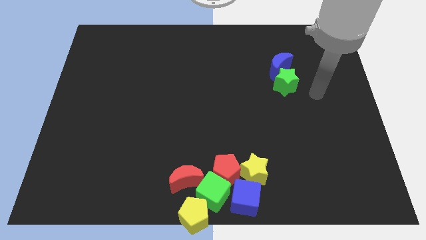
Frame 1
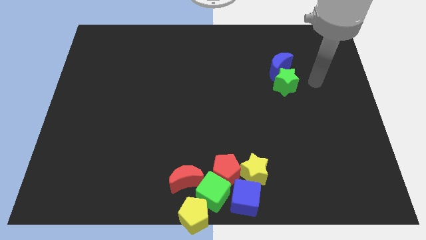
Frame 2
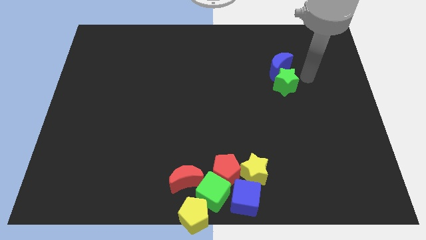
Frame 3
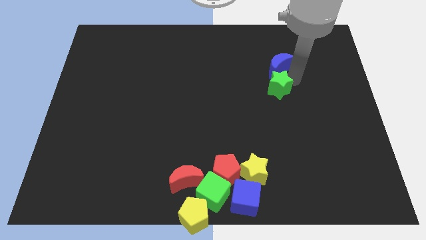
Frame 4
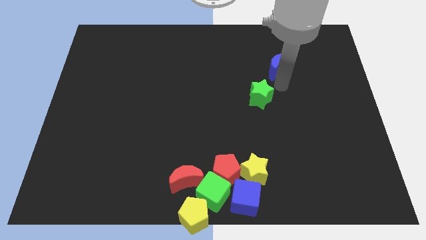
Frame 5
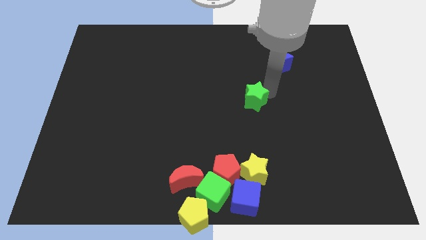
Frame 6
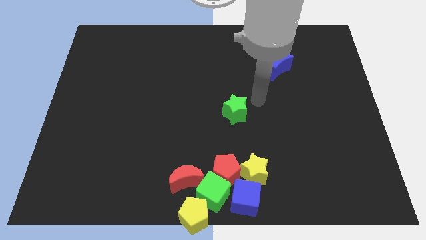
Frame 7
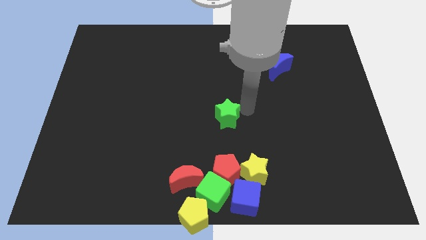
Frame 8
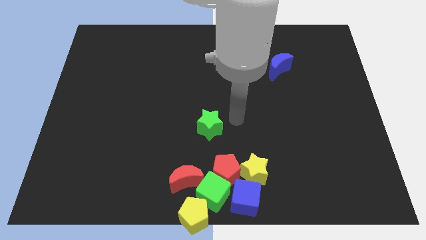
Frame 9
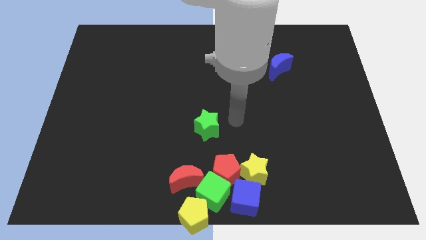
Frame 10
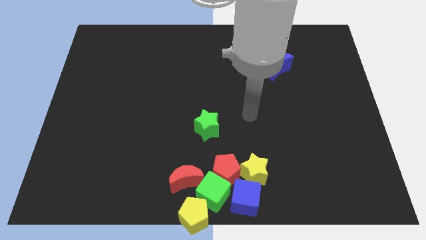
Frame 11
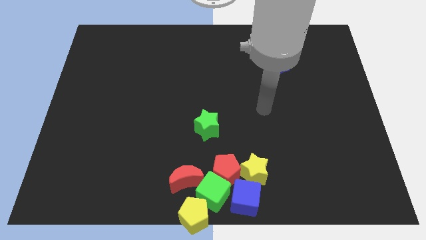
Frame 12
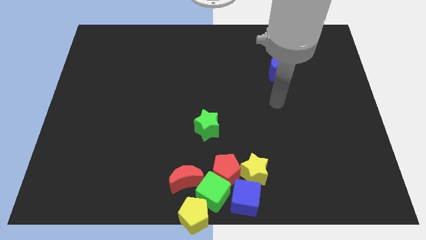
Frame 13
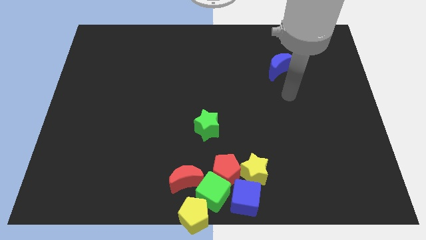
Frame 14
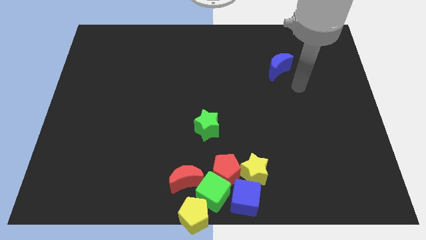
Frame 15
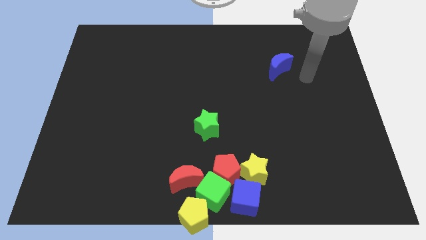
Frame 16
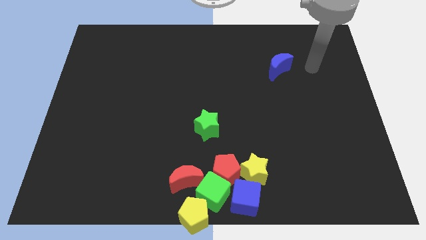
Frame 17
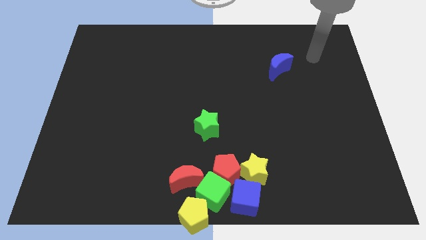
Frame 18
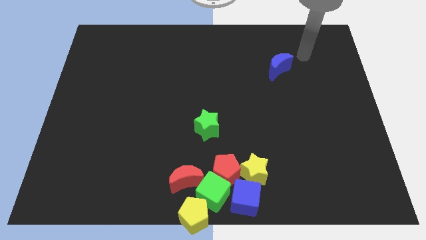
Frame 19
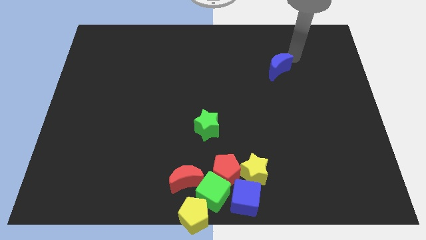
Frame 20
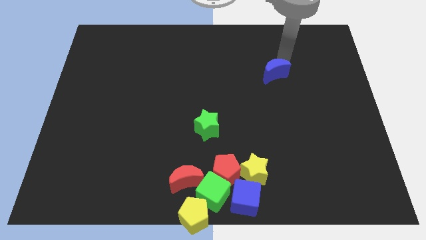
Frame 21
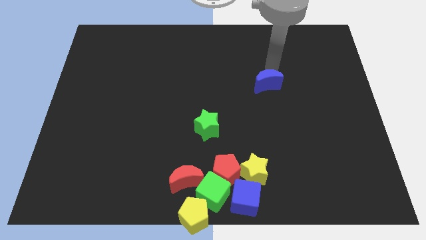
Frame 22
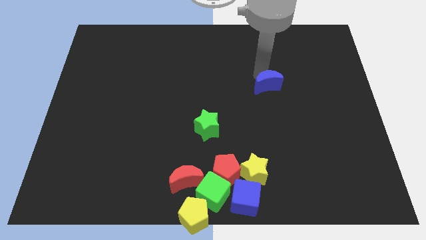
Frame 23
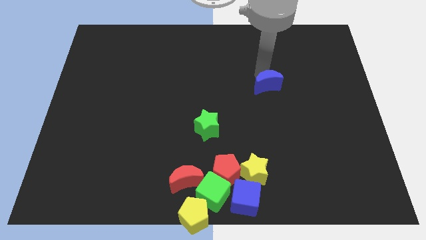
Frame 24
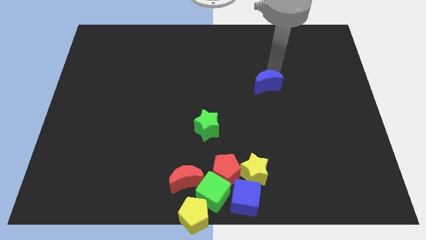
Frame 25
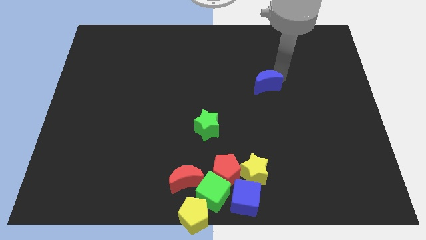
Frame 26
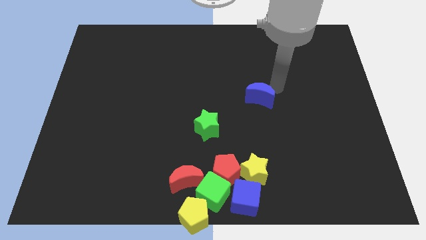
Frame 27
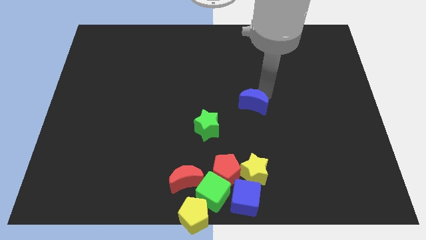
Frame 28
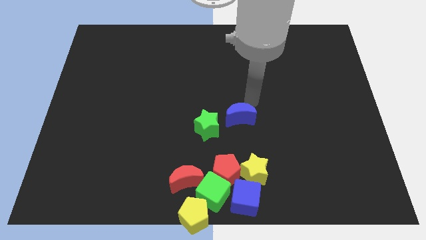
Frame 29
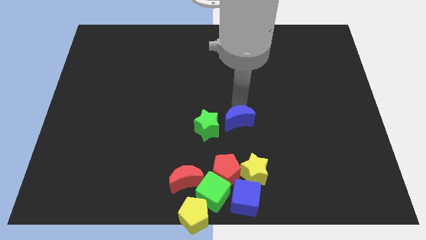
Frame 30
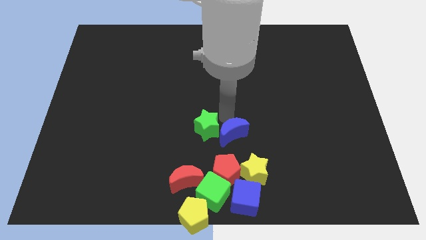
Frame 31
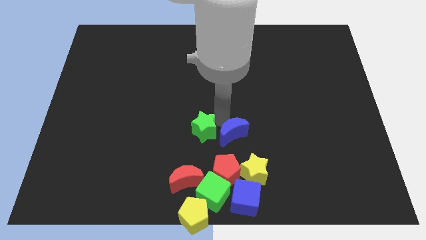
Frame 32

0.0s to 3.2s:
move the green star and blue cube towards the top side of the group of blocks

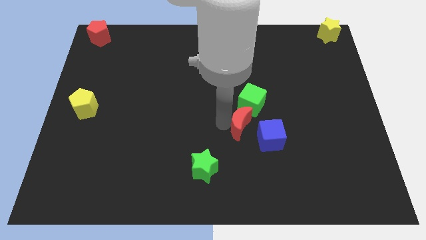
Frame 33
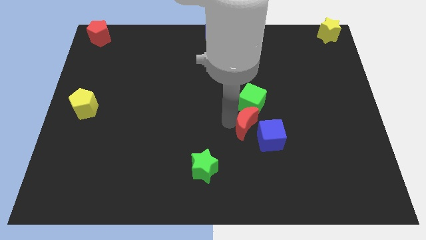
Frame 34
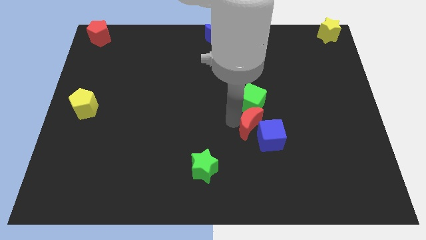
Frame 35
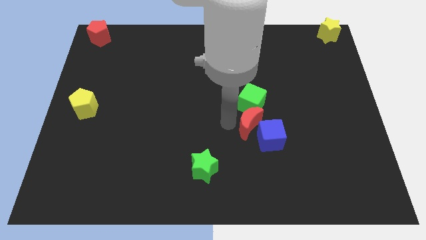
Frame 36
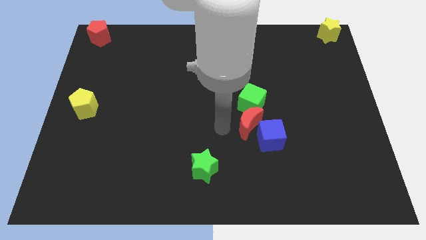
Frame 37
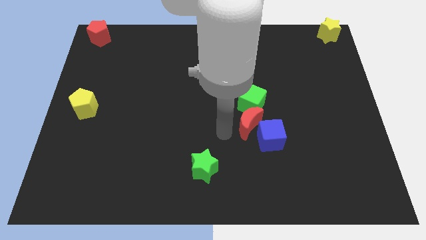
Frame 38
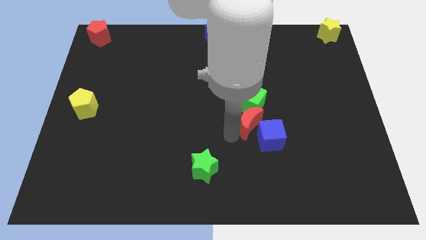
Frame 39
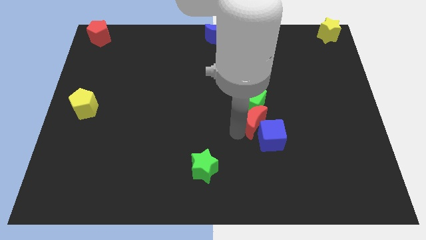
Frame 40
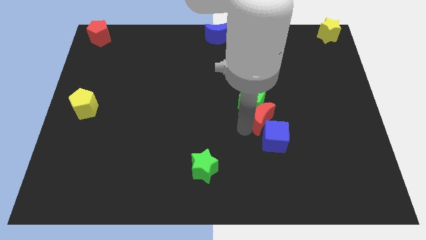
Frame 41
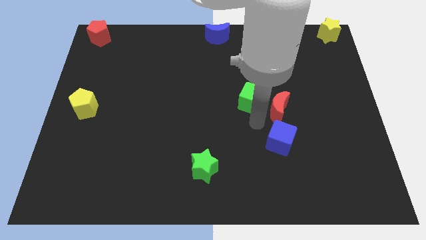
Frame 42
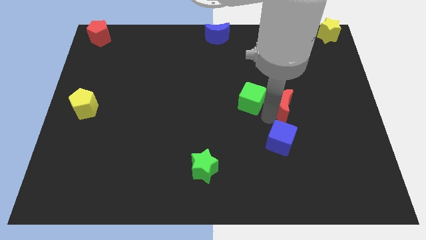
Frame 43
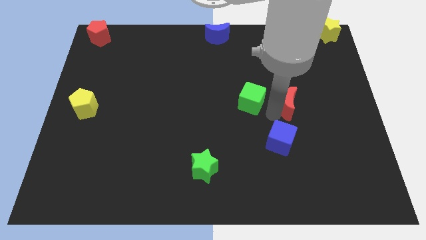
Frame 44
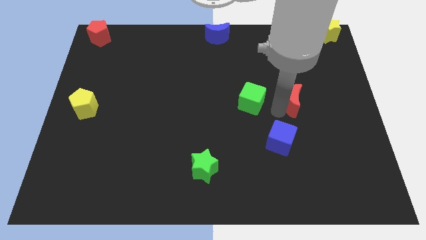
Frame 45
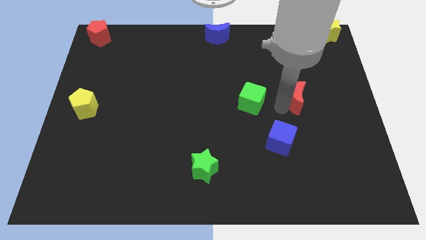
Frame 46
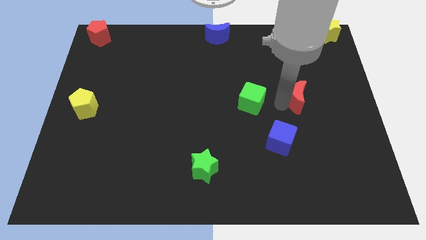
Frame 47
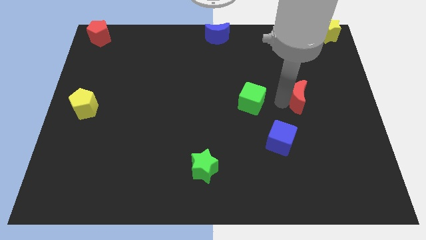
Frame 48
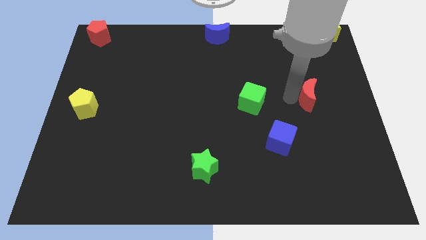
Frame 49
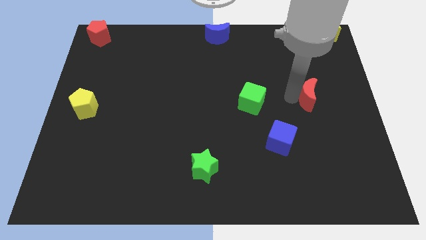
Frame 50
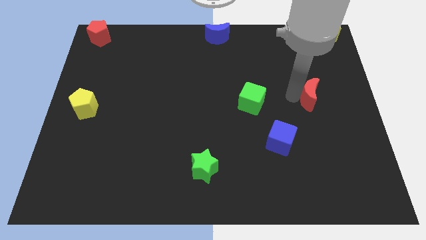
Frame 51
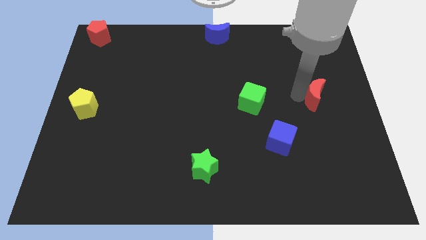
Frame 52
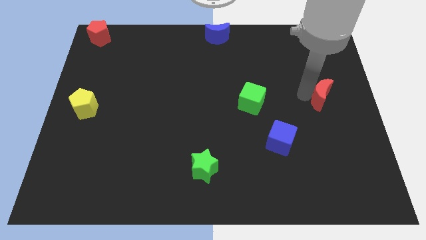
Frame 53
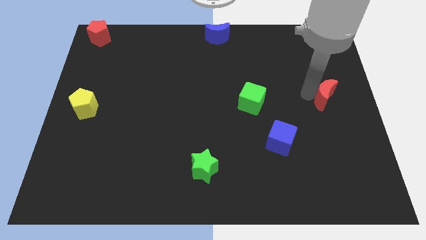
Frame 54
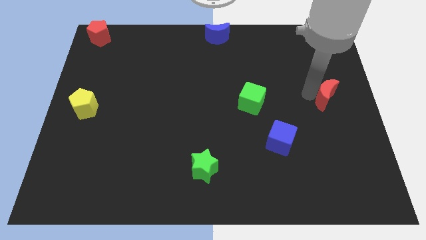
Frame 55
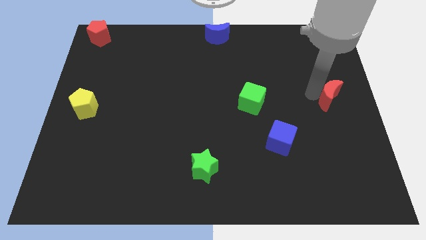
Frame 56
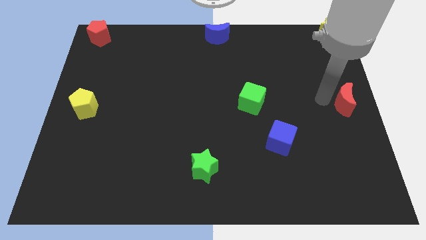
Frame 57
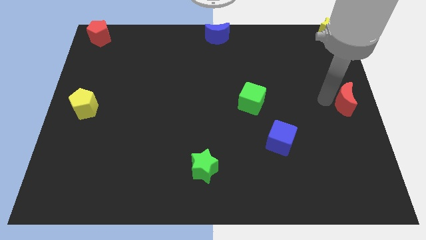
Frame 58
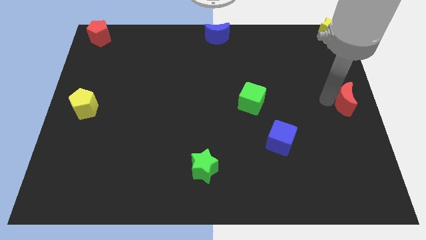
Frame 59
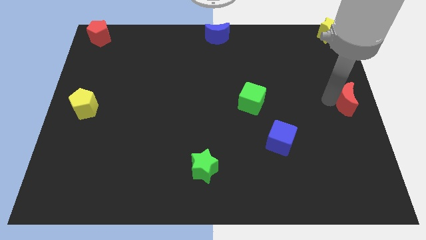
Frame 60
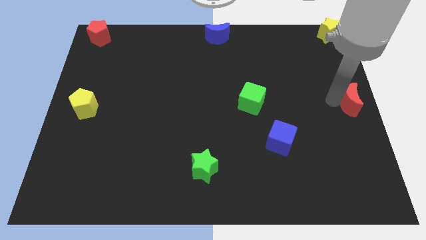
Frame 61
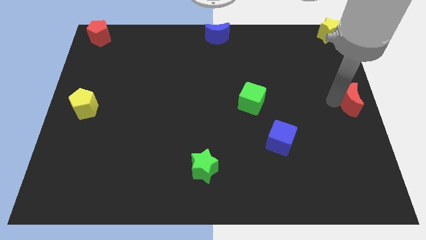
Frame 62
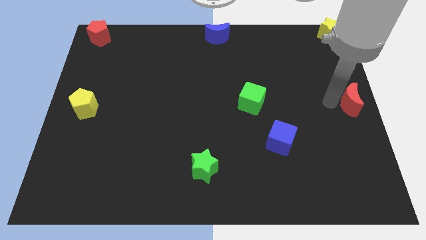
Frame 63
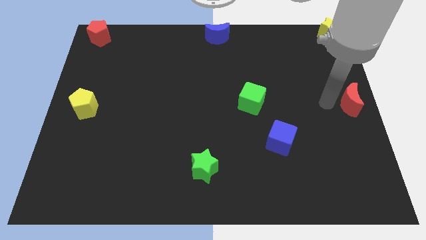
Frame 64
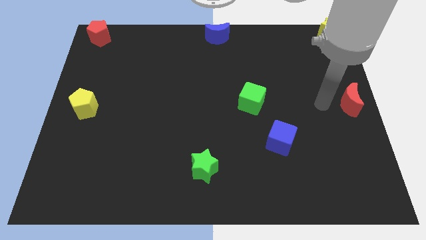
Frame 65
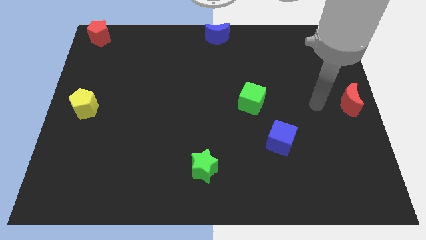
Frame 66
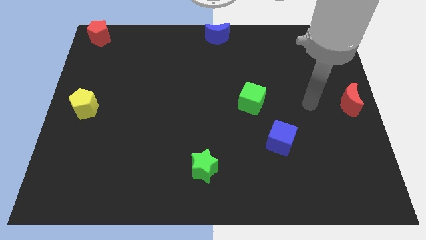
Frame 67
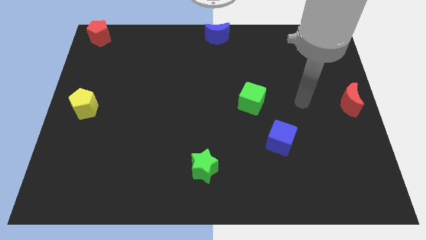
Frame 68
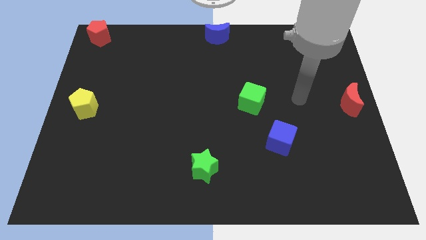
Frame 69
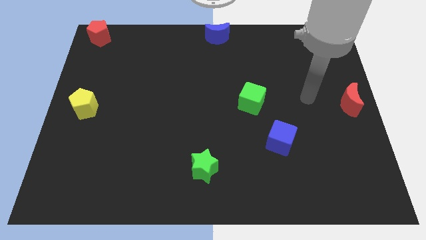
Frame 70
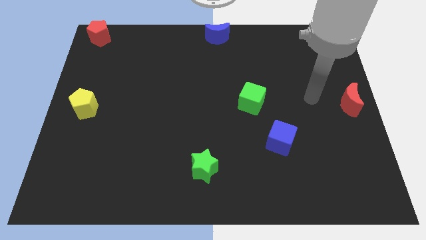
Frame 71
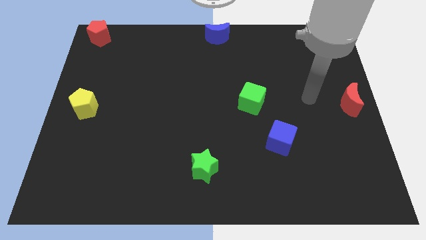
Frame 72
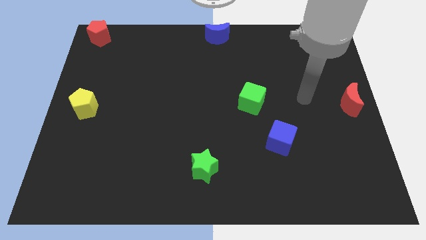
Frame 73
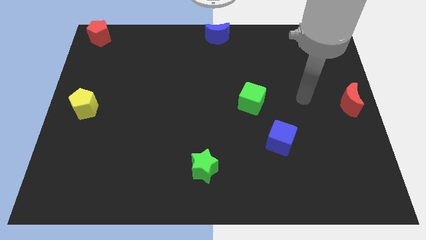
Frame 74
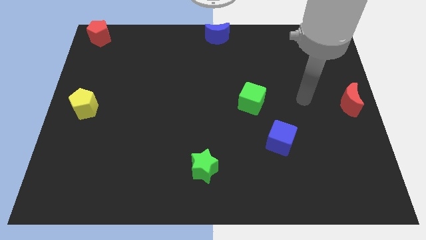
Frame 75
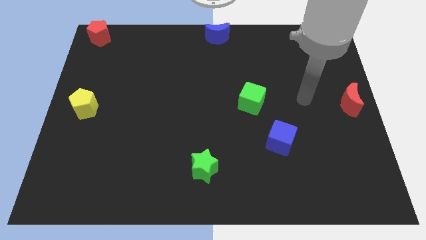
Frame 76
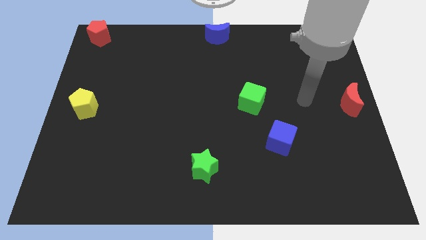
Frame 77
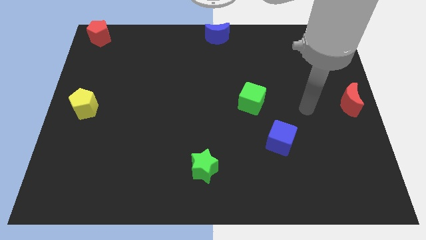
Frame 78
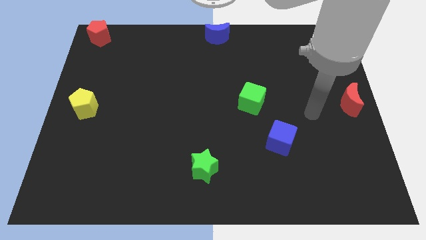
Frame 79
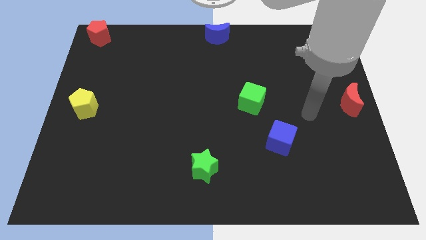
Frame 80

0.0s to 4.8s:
push the red crescent towards the right center of the board

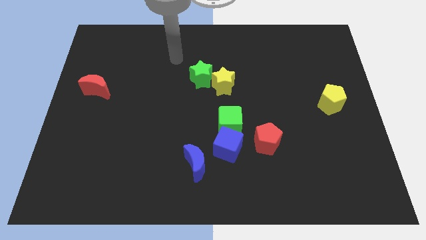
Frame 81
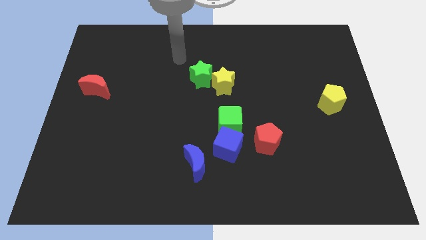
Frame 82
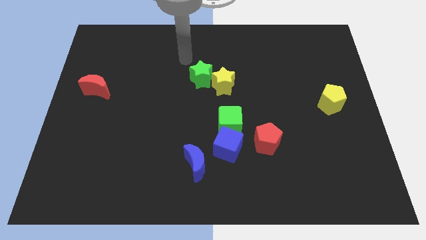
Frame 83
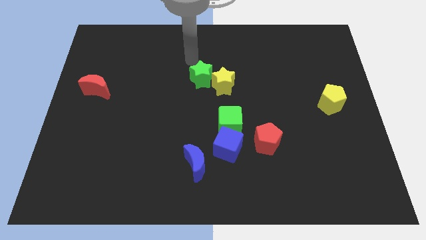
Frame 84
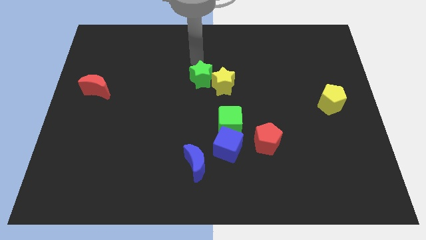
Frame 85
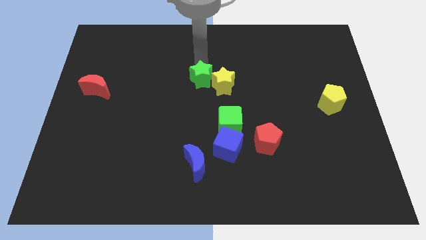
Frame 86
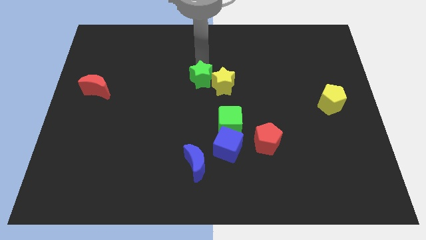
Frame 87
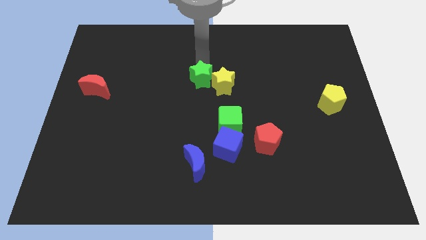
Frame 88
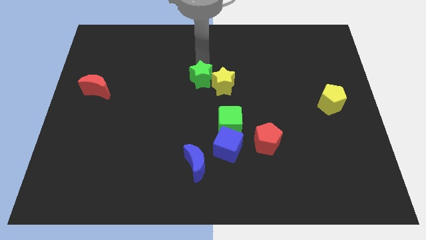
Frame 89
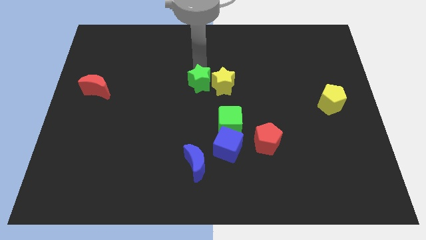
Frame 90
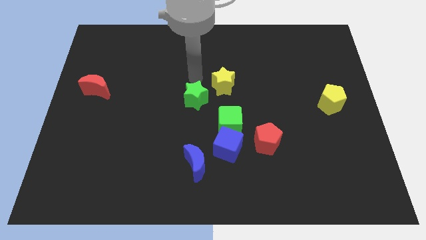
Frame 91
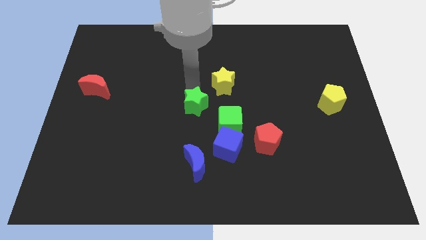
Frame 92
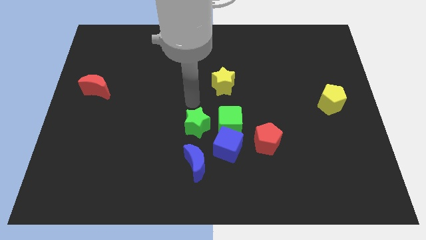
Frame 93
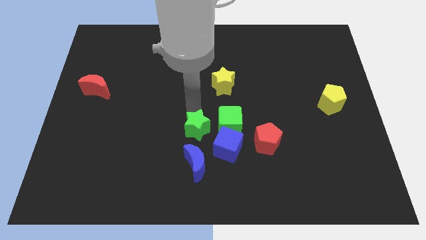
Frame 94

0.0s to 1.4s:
slide the green star to the left side of the green cube
